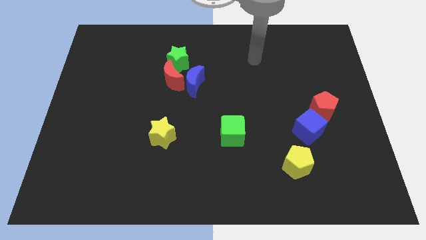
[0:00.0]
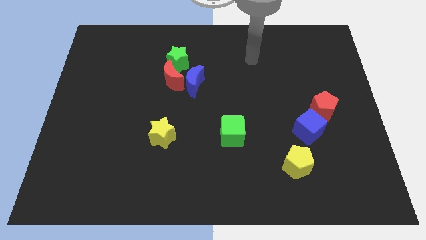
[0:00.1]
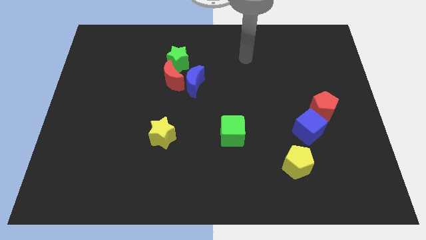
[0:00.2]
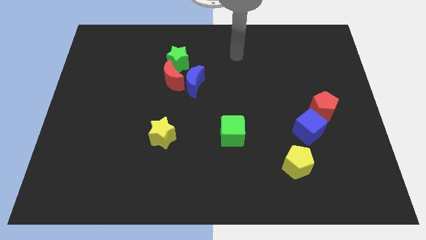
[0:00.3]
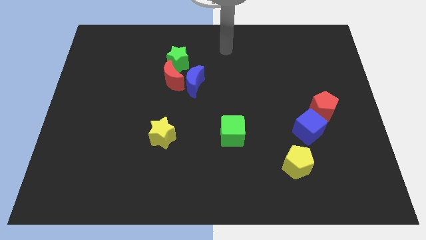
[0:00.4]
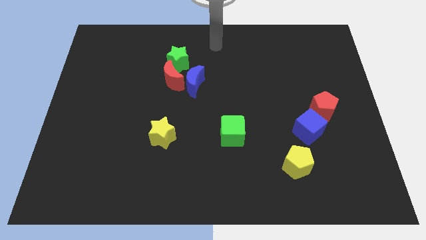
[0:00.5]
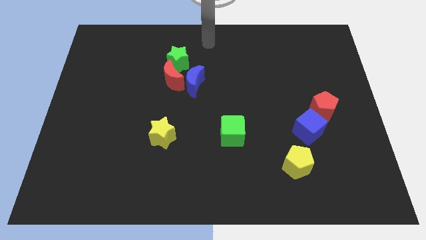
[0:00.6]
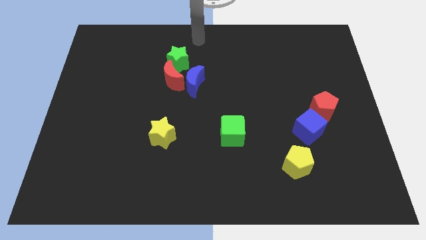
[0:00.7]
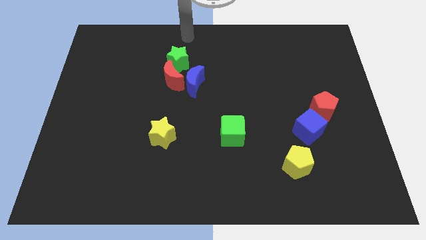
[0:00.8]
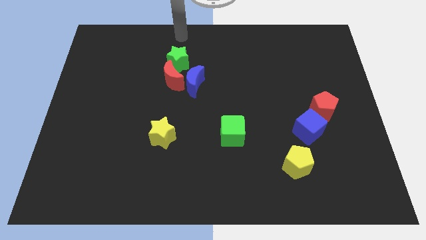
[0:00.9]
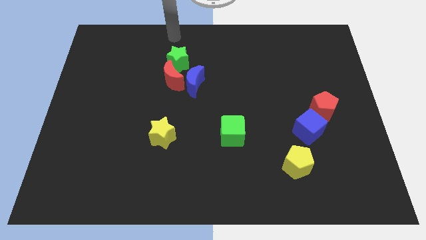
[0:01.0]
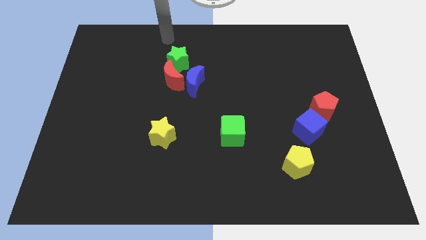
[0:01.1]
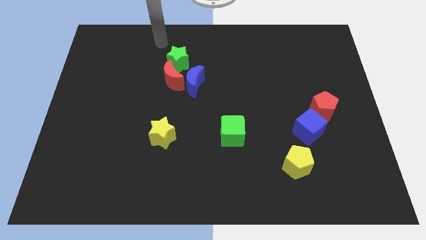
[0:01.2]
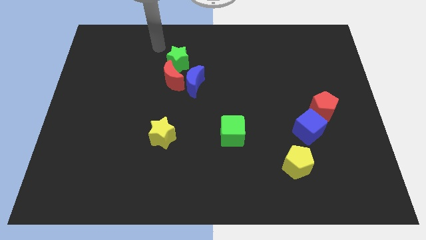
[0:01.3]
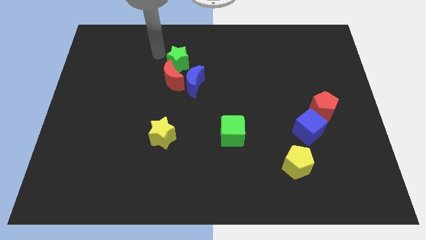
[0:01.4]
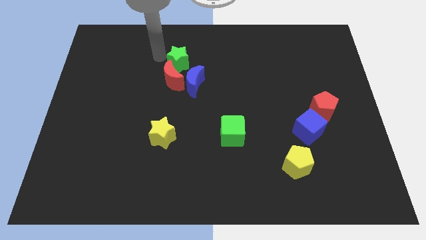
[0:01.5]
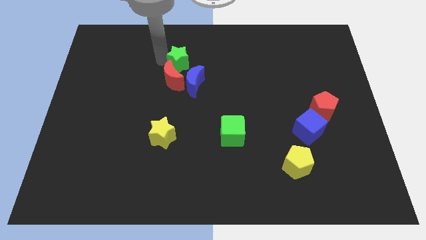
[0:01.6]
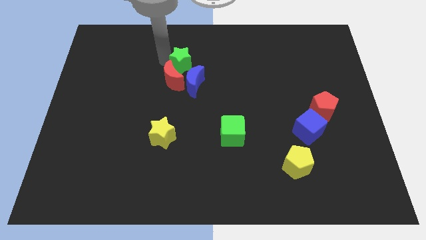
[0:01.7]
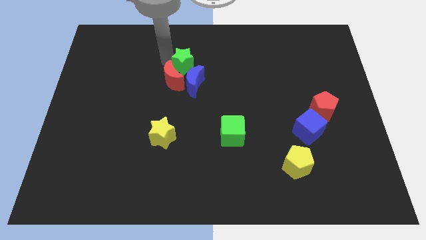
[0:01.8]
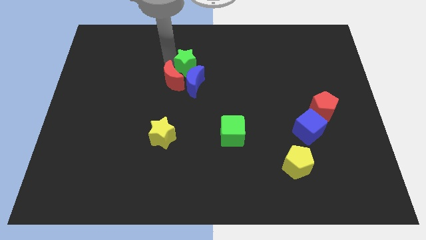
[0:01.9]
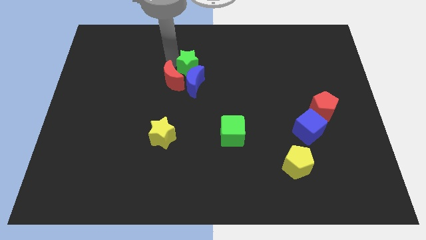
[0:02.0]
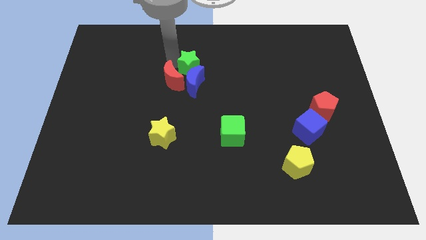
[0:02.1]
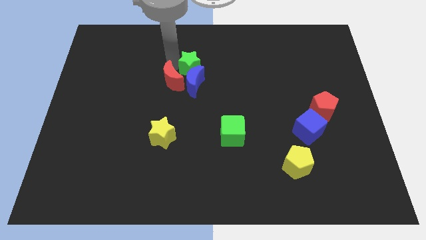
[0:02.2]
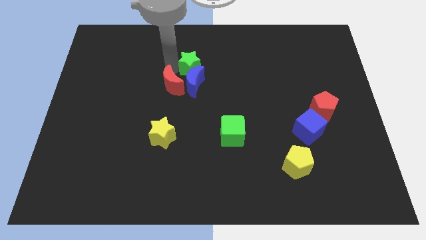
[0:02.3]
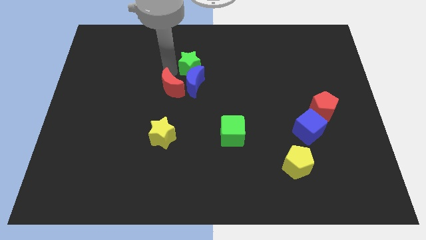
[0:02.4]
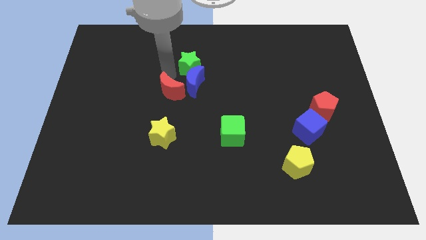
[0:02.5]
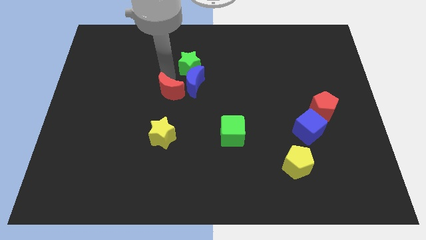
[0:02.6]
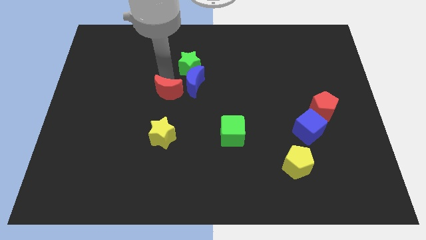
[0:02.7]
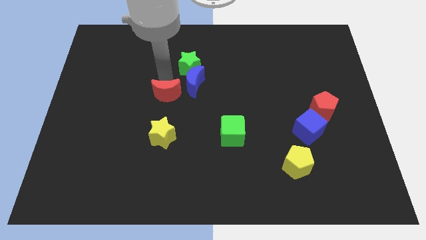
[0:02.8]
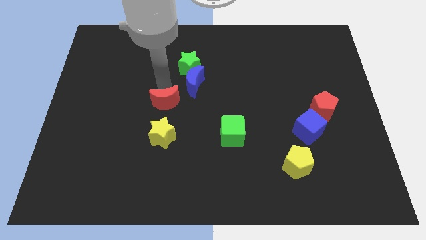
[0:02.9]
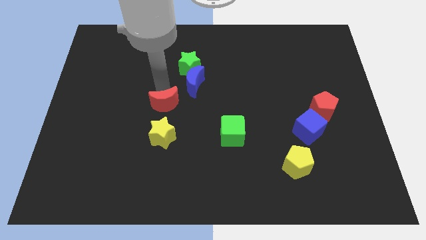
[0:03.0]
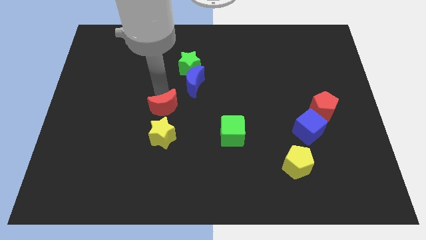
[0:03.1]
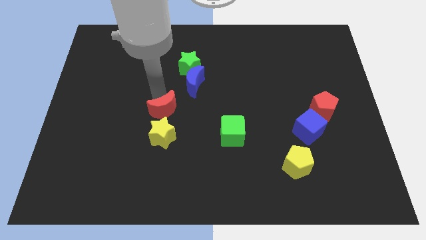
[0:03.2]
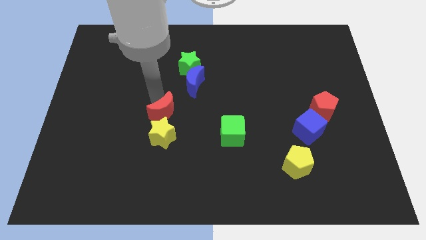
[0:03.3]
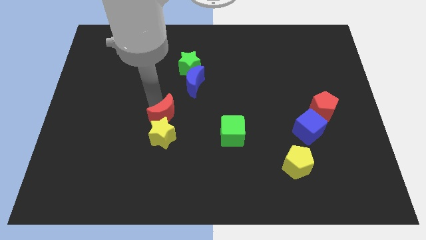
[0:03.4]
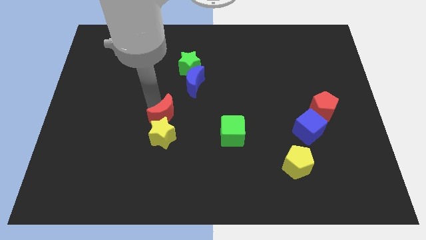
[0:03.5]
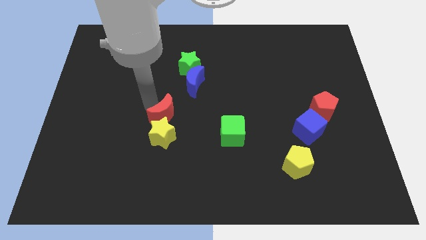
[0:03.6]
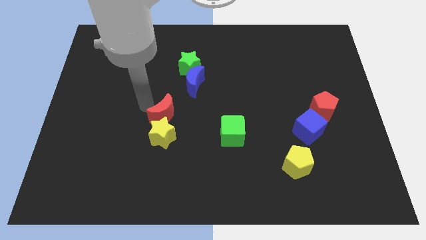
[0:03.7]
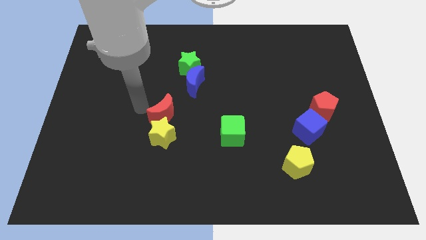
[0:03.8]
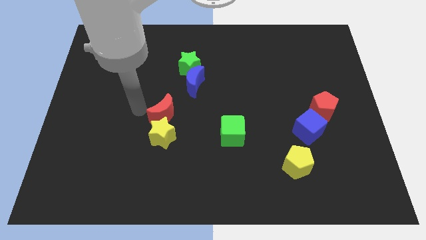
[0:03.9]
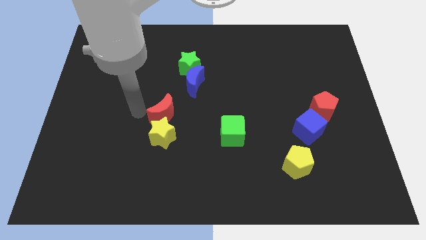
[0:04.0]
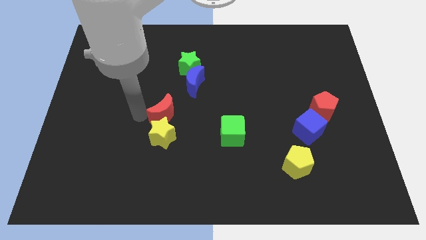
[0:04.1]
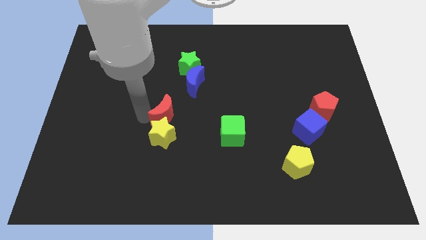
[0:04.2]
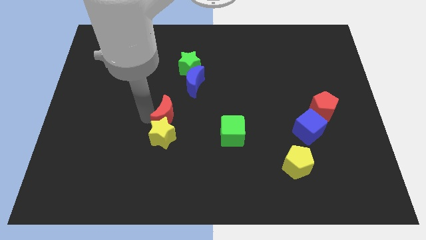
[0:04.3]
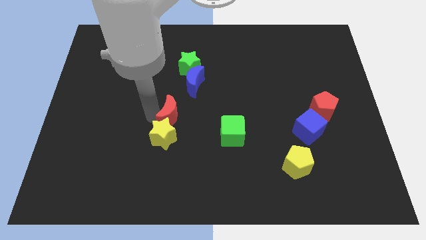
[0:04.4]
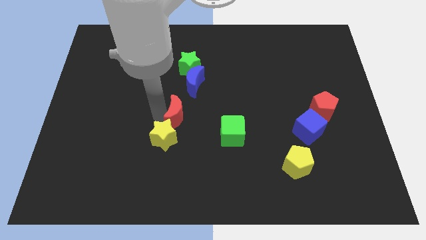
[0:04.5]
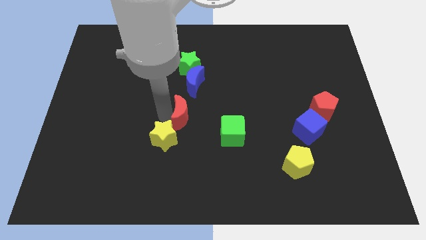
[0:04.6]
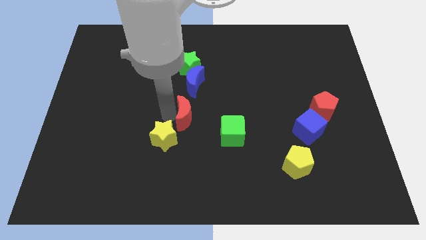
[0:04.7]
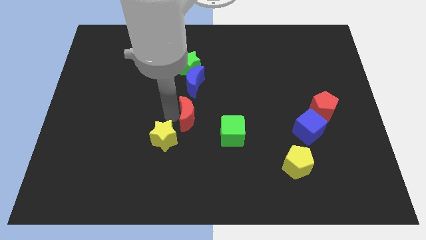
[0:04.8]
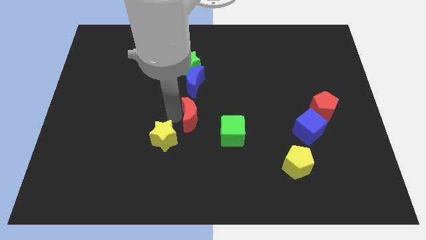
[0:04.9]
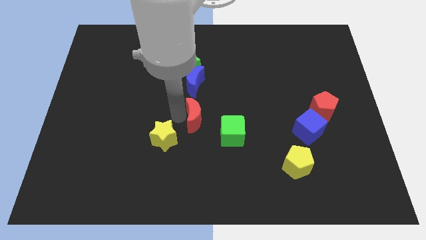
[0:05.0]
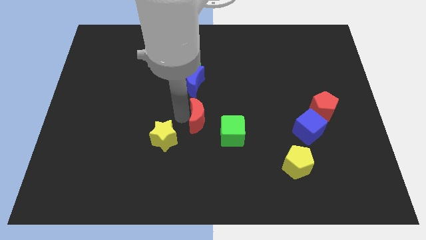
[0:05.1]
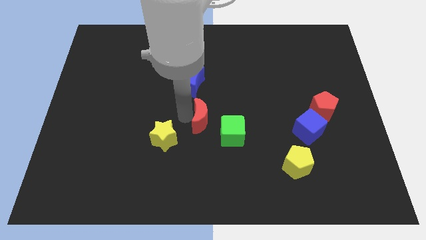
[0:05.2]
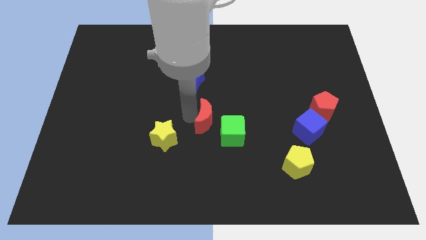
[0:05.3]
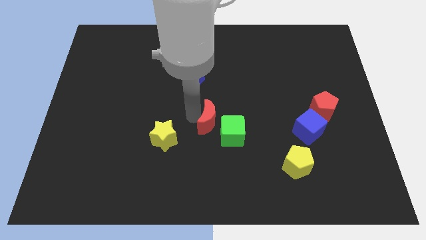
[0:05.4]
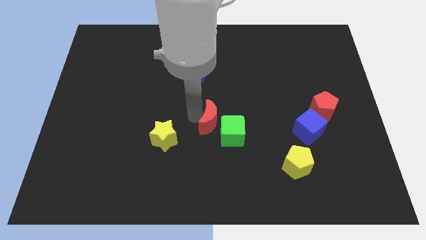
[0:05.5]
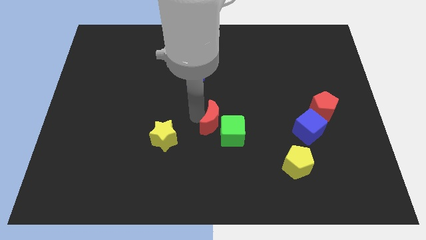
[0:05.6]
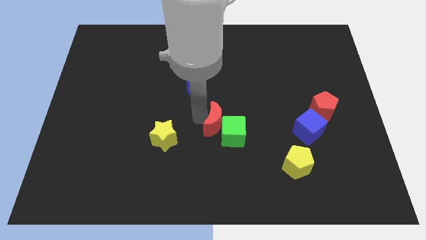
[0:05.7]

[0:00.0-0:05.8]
push the red moon to the green cube

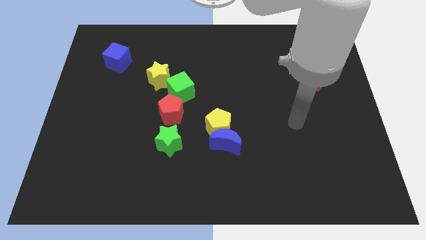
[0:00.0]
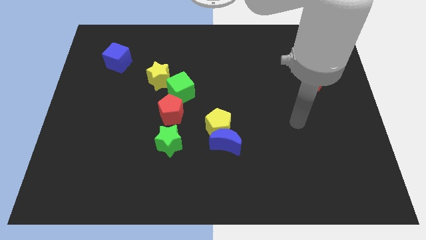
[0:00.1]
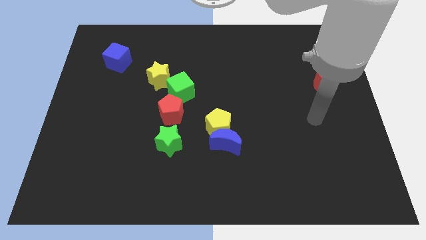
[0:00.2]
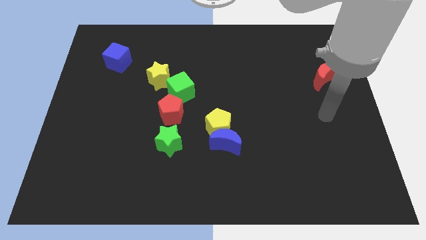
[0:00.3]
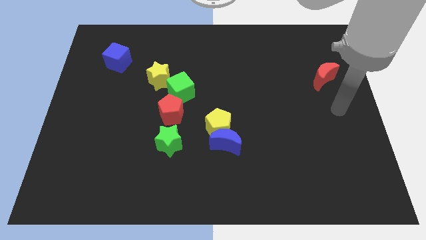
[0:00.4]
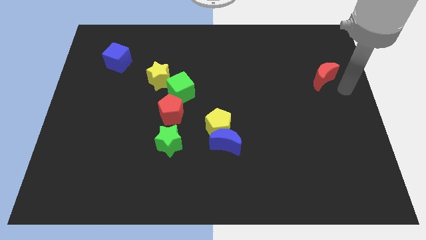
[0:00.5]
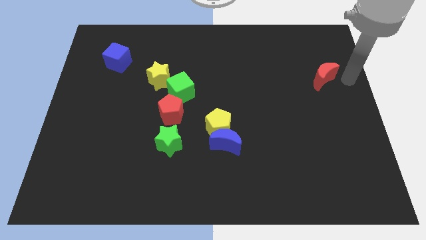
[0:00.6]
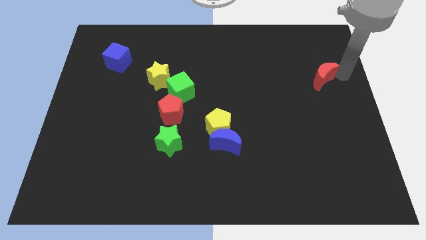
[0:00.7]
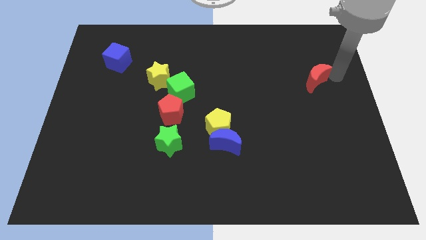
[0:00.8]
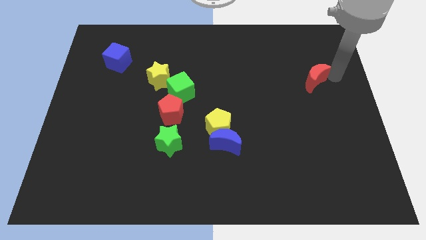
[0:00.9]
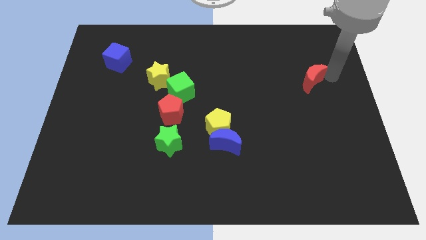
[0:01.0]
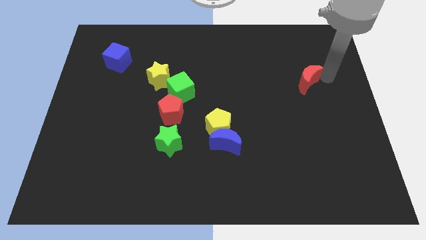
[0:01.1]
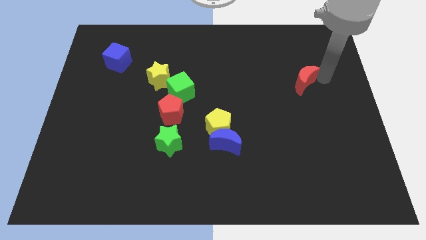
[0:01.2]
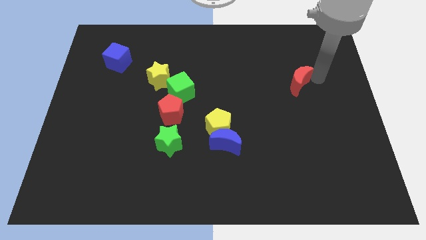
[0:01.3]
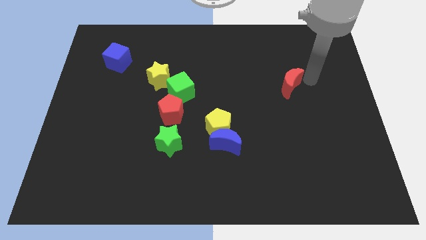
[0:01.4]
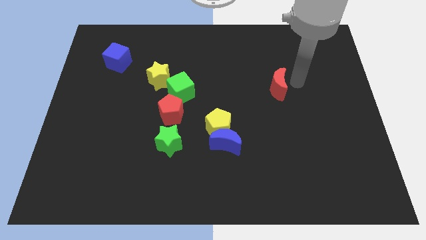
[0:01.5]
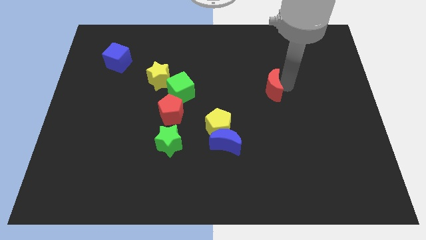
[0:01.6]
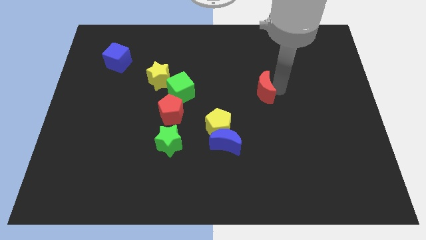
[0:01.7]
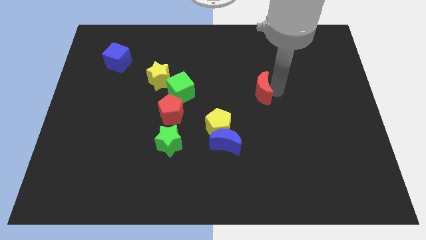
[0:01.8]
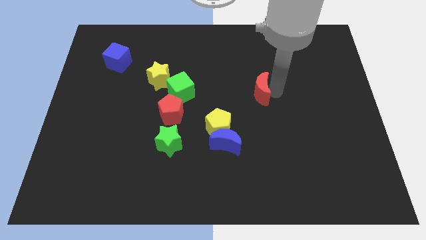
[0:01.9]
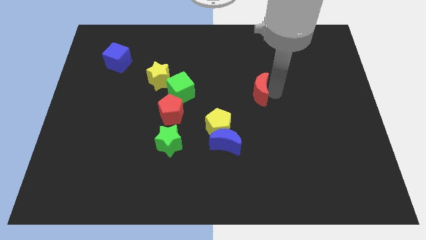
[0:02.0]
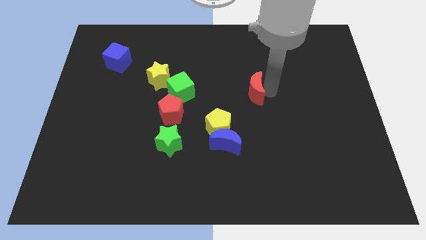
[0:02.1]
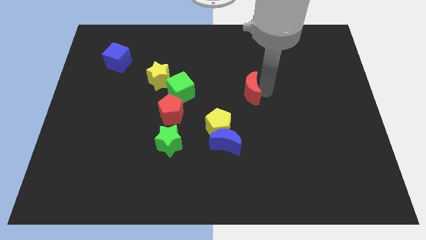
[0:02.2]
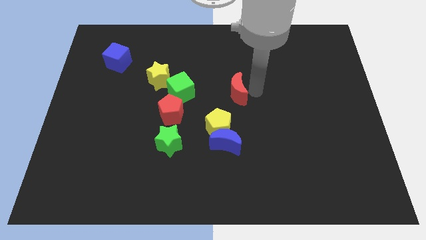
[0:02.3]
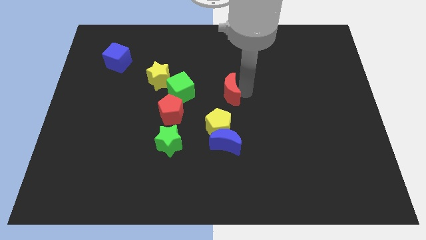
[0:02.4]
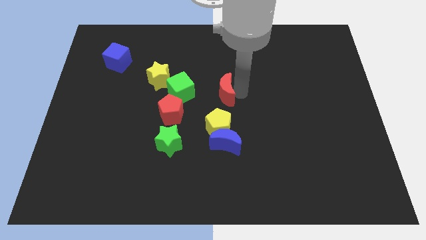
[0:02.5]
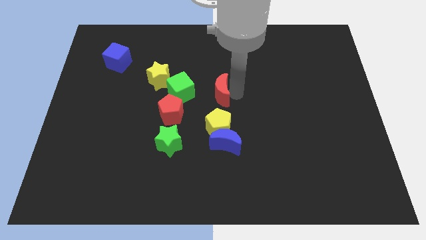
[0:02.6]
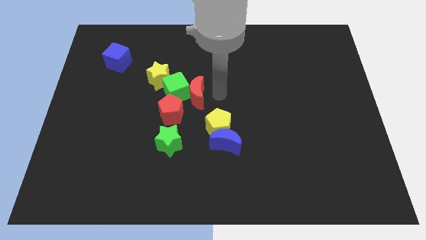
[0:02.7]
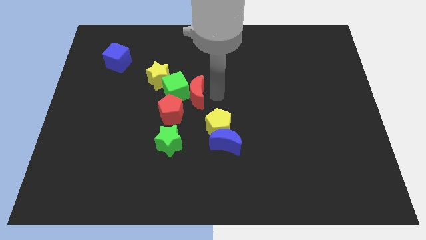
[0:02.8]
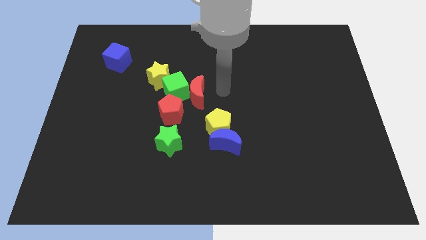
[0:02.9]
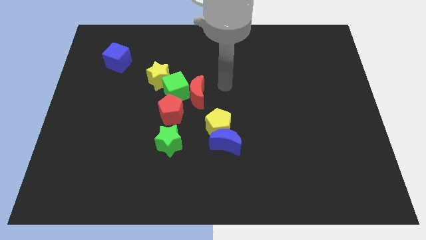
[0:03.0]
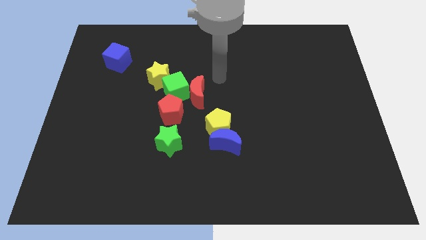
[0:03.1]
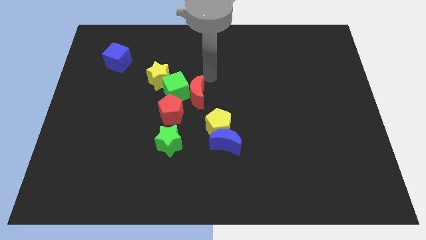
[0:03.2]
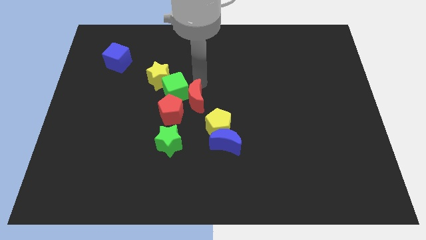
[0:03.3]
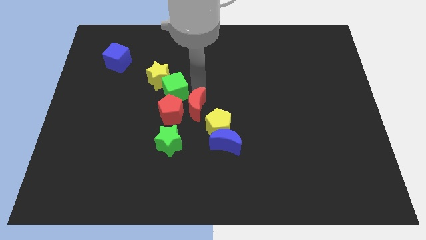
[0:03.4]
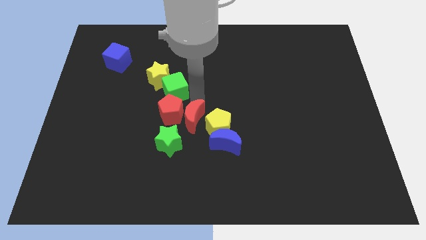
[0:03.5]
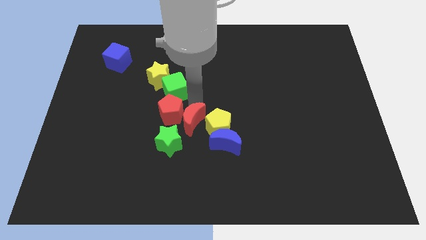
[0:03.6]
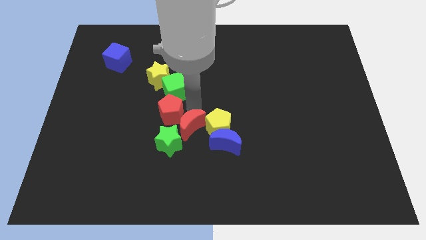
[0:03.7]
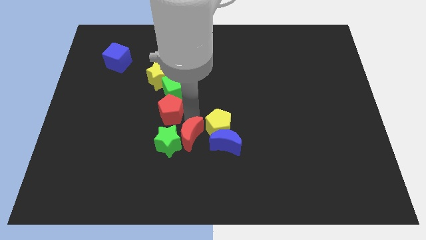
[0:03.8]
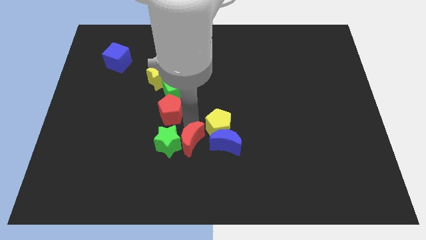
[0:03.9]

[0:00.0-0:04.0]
move the red moon next to the green star
